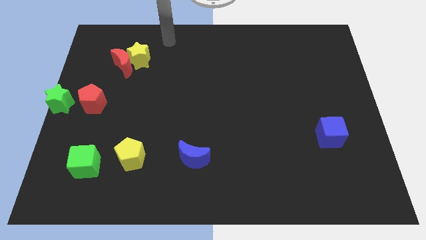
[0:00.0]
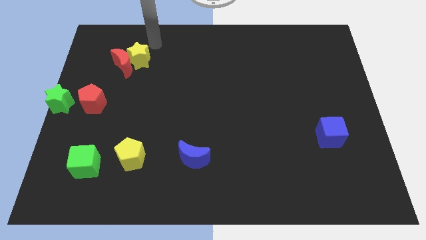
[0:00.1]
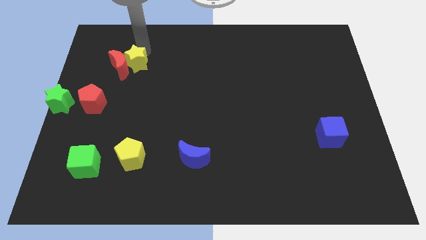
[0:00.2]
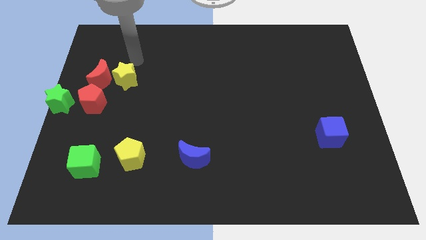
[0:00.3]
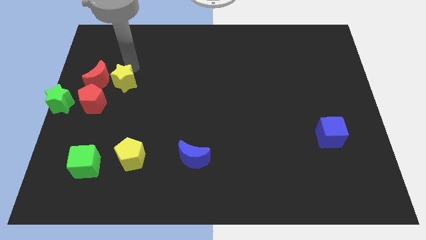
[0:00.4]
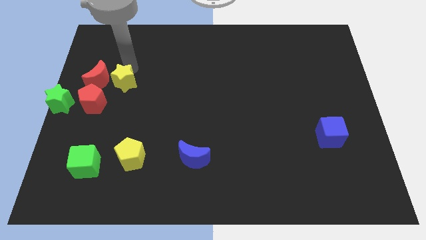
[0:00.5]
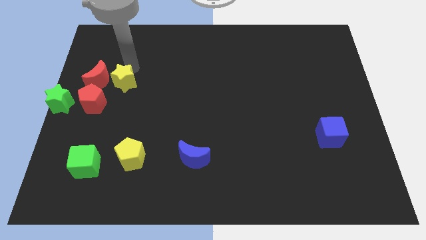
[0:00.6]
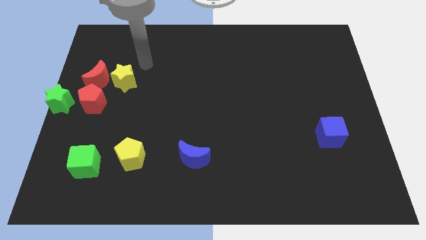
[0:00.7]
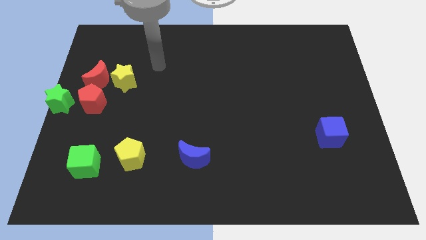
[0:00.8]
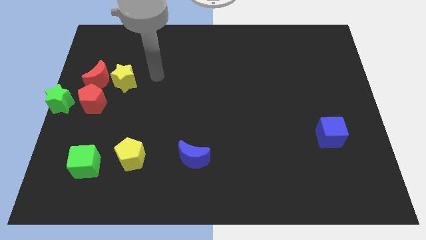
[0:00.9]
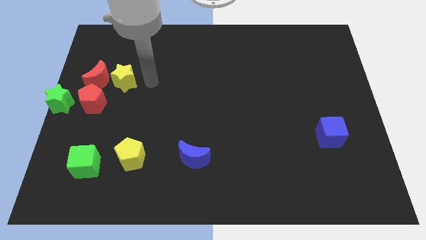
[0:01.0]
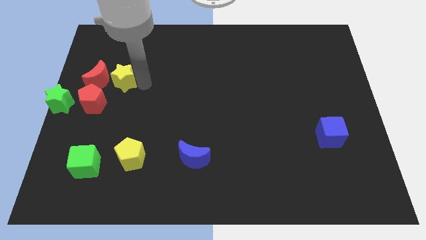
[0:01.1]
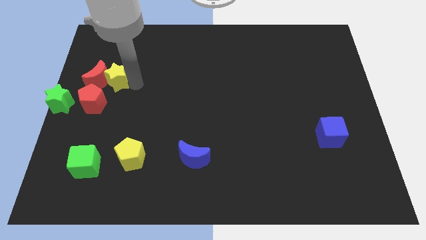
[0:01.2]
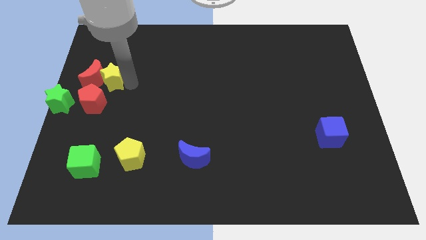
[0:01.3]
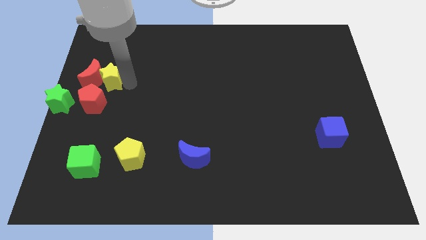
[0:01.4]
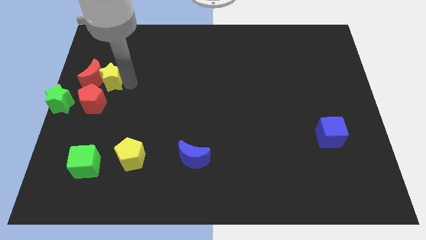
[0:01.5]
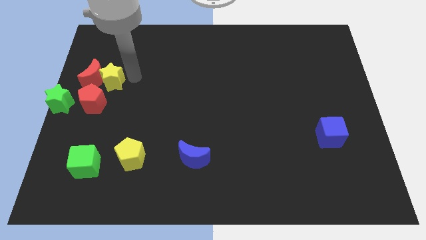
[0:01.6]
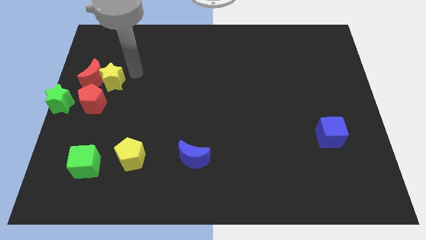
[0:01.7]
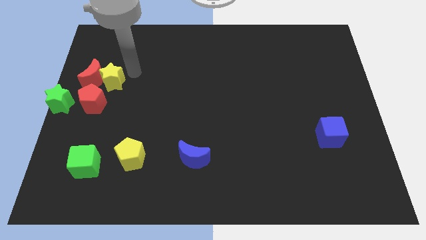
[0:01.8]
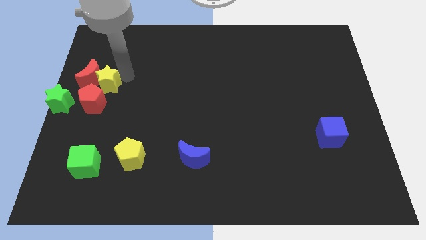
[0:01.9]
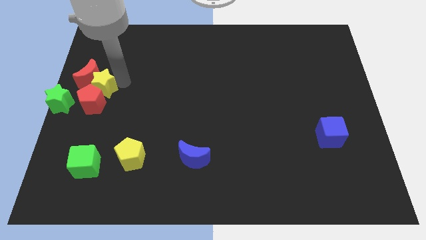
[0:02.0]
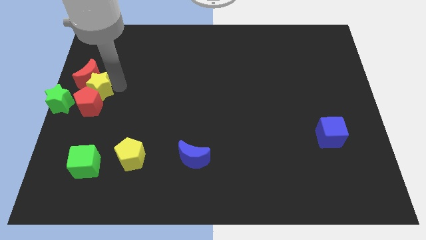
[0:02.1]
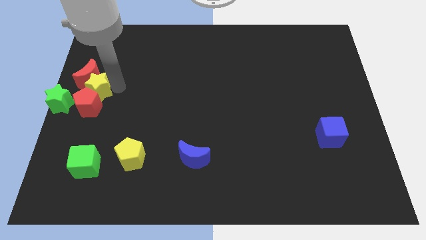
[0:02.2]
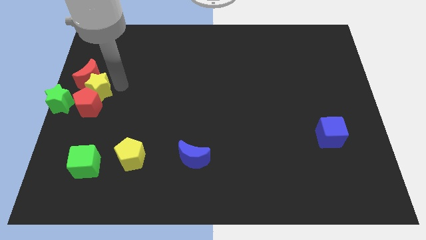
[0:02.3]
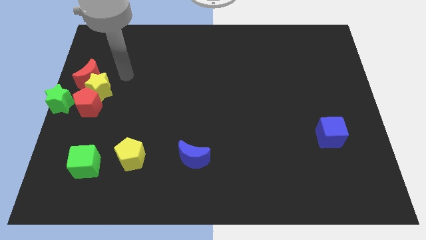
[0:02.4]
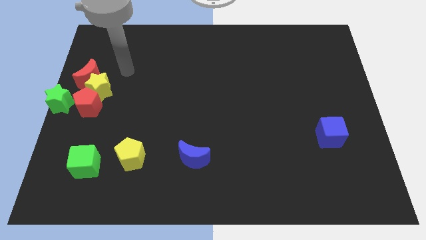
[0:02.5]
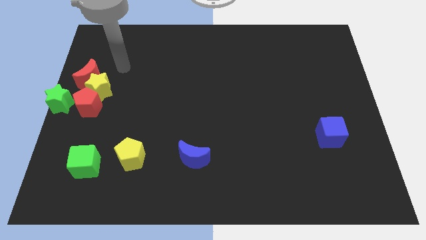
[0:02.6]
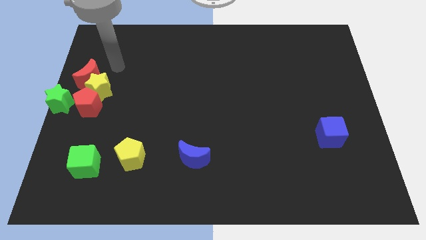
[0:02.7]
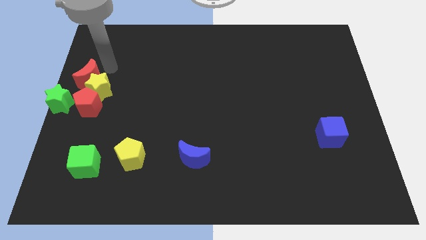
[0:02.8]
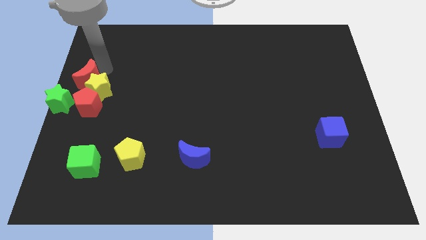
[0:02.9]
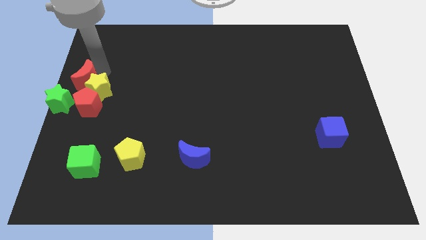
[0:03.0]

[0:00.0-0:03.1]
push the yellow star to the top of the red pentagon along with the red crescent

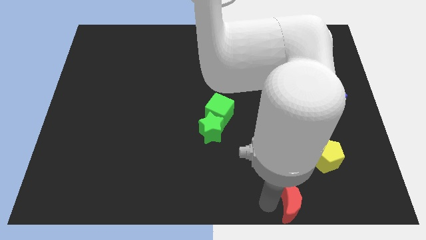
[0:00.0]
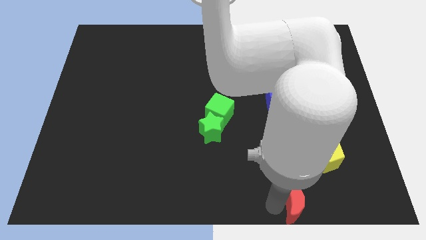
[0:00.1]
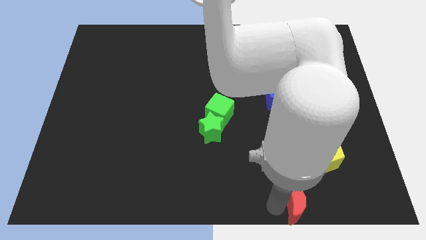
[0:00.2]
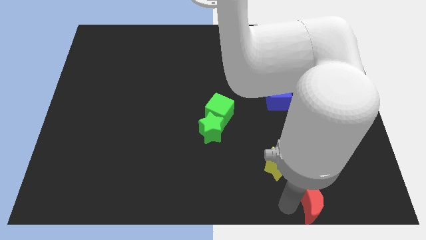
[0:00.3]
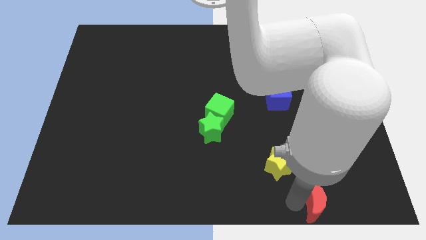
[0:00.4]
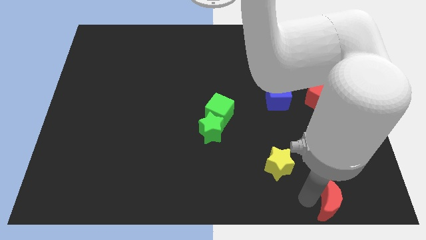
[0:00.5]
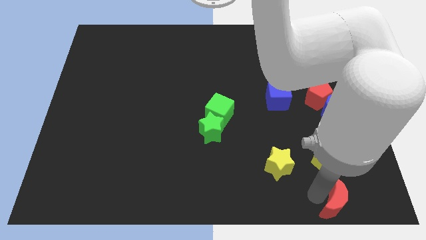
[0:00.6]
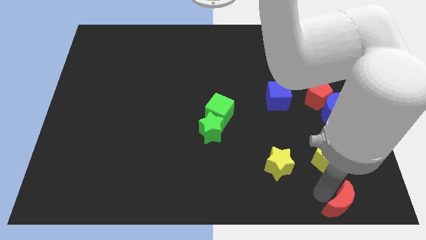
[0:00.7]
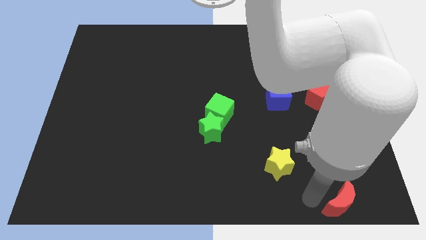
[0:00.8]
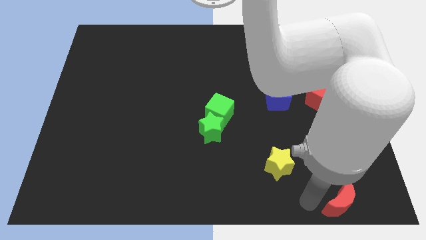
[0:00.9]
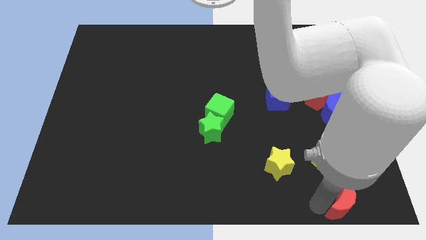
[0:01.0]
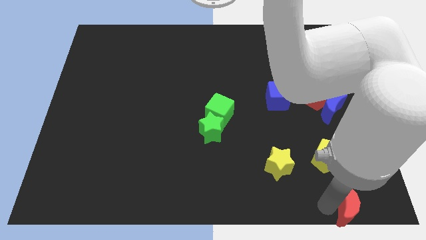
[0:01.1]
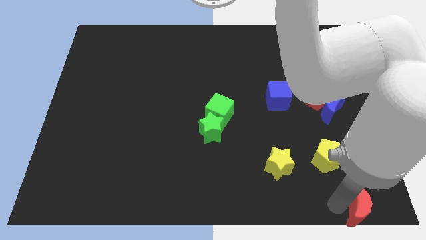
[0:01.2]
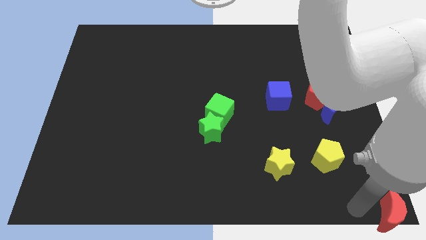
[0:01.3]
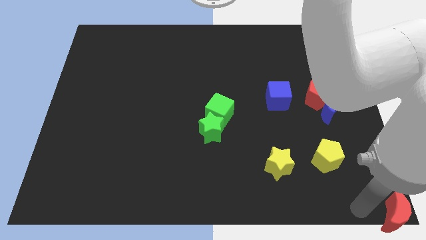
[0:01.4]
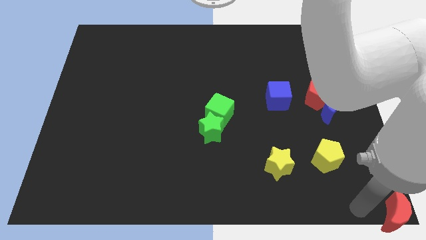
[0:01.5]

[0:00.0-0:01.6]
push the red crescent to the bottom right corner of the board

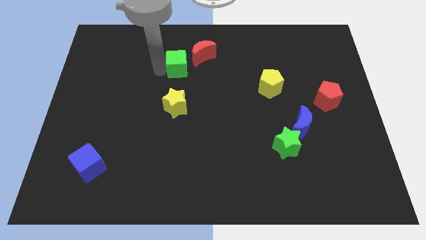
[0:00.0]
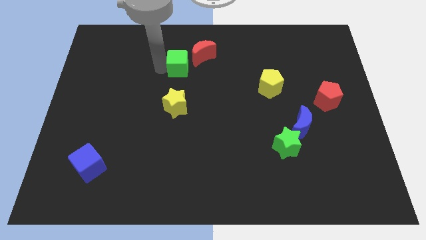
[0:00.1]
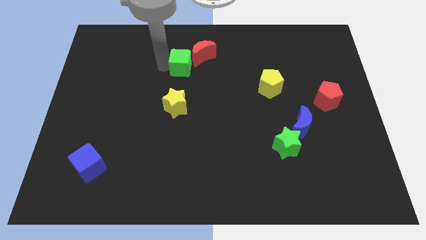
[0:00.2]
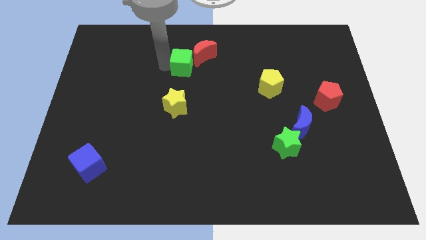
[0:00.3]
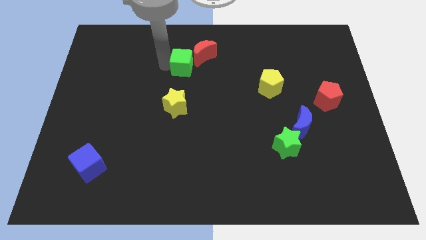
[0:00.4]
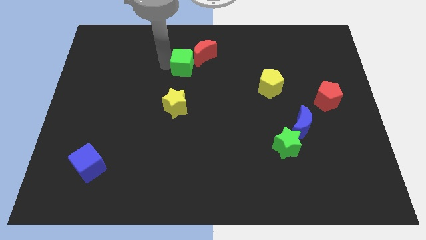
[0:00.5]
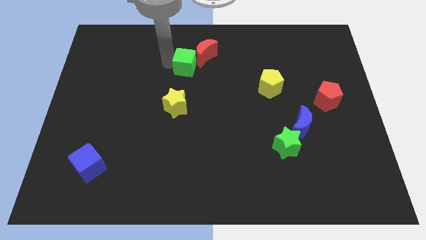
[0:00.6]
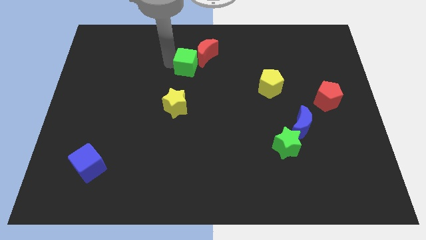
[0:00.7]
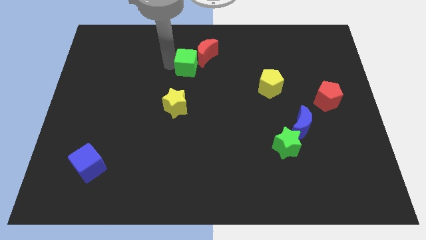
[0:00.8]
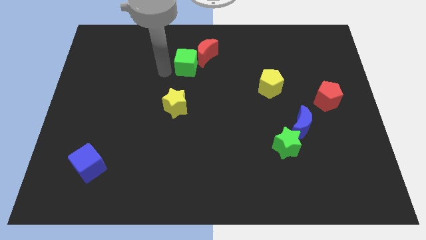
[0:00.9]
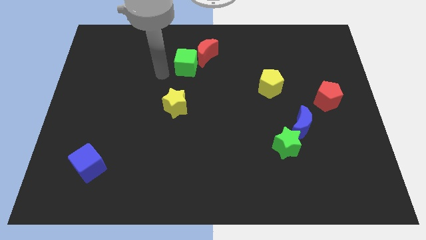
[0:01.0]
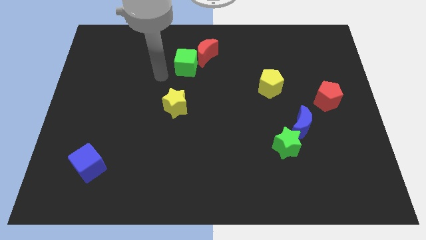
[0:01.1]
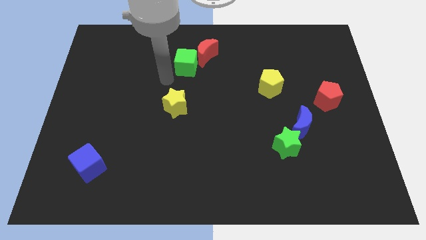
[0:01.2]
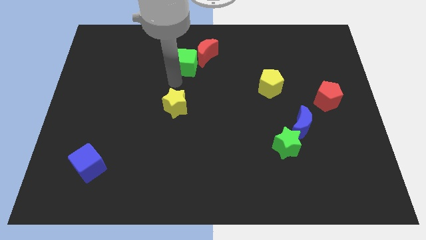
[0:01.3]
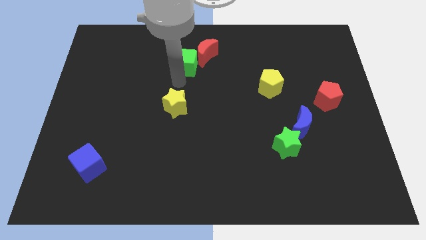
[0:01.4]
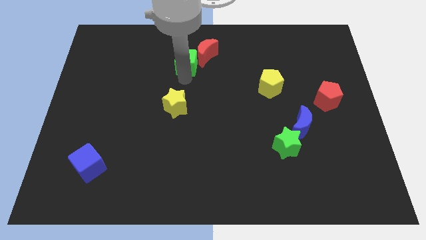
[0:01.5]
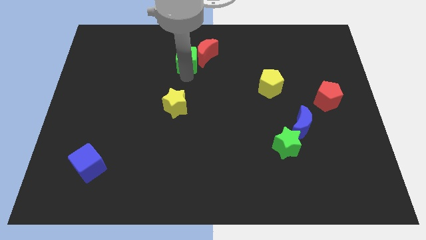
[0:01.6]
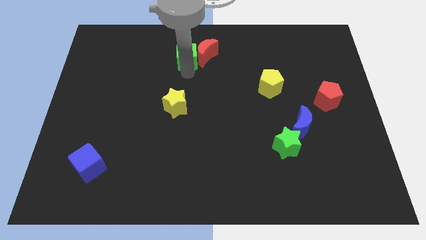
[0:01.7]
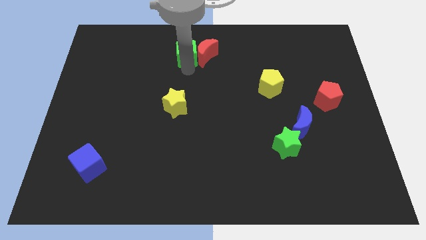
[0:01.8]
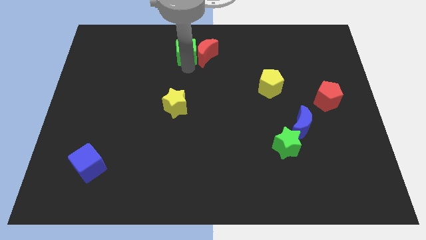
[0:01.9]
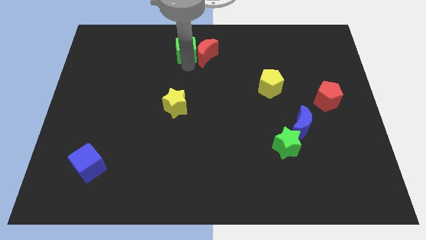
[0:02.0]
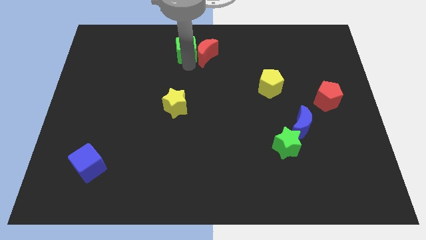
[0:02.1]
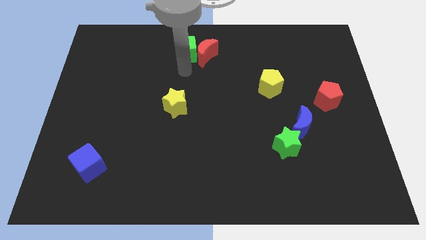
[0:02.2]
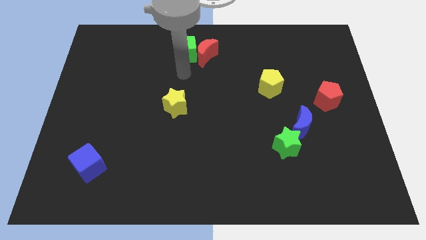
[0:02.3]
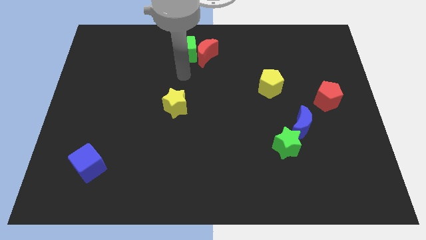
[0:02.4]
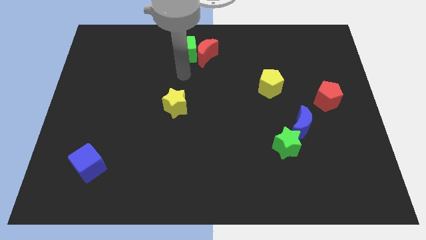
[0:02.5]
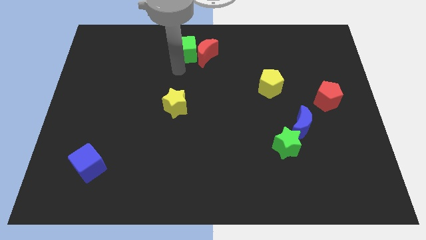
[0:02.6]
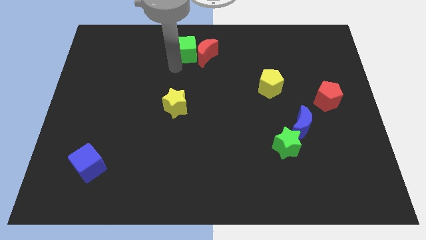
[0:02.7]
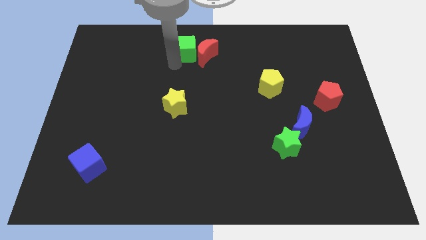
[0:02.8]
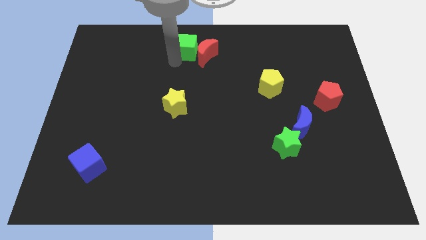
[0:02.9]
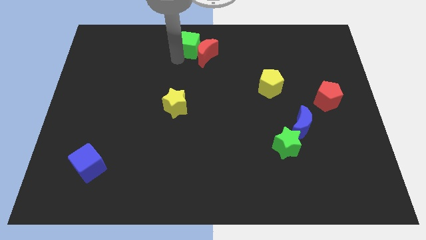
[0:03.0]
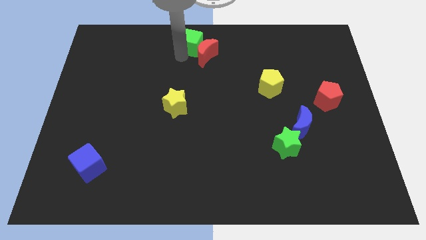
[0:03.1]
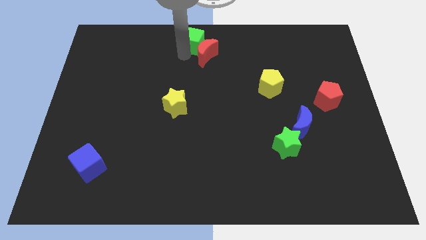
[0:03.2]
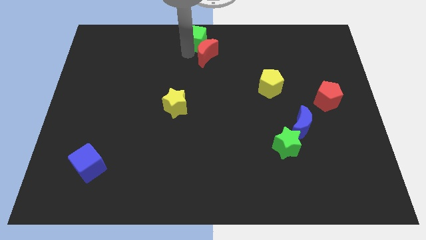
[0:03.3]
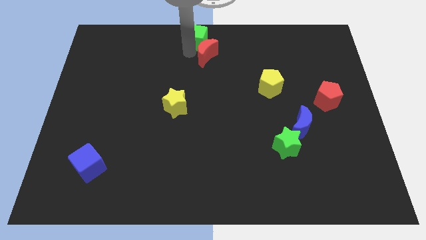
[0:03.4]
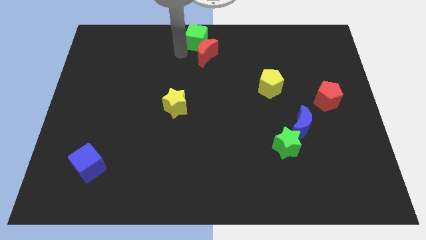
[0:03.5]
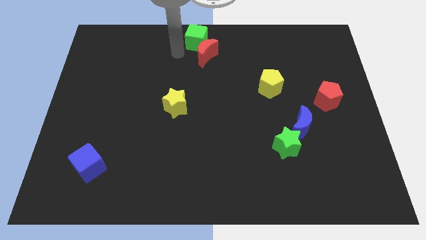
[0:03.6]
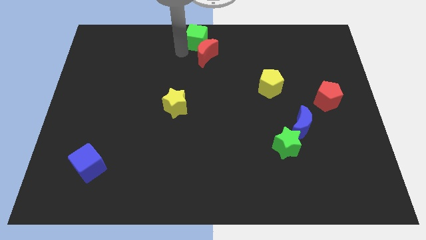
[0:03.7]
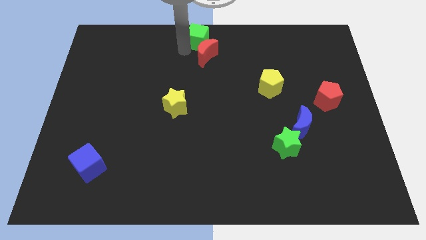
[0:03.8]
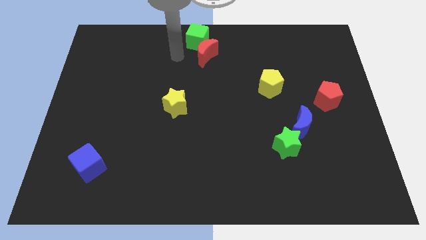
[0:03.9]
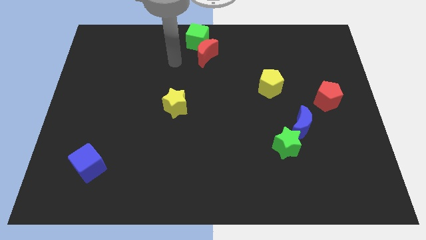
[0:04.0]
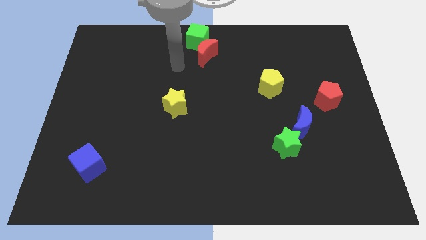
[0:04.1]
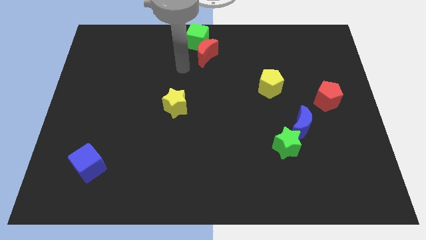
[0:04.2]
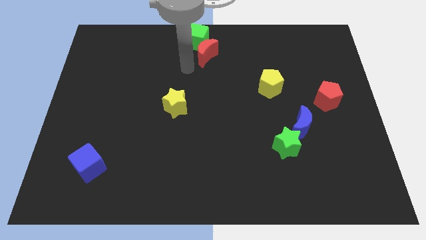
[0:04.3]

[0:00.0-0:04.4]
place the green cube at the top center of the board
